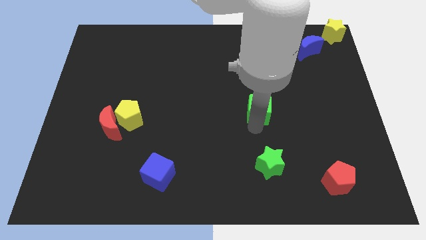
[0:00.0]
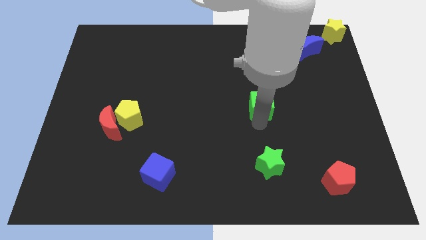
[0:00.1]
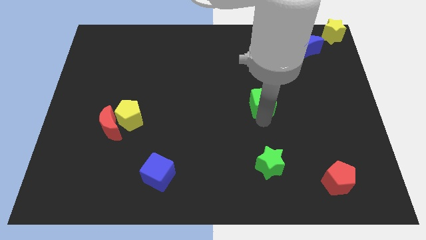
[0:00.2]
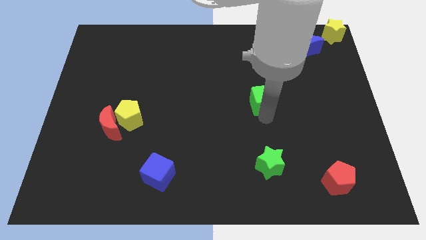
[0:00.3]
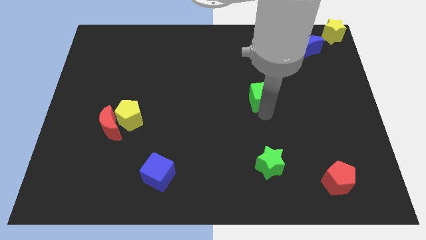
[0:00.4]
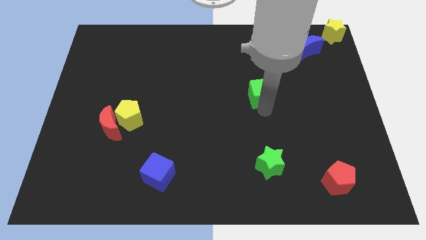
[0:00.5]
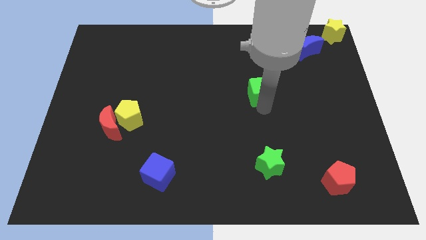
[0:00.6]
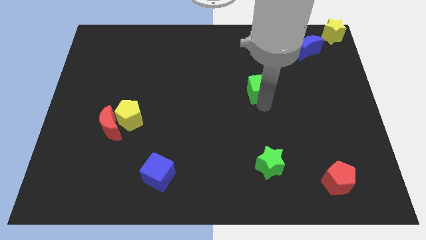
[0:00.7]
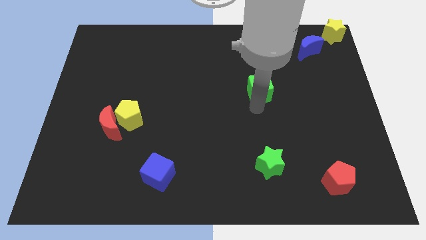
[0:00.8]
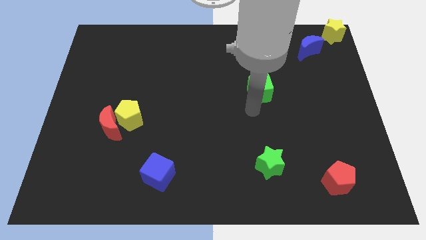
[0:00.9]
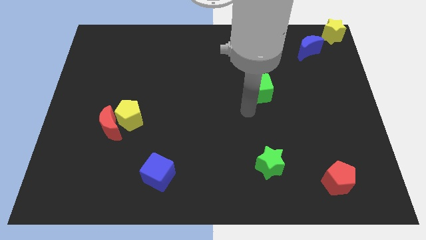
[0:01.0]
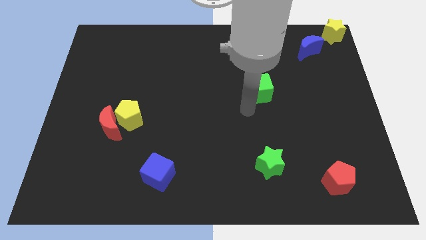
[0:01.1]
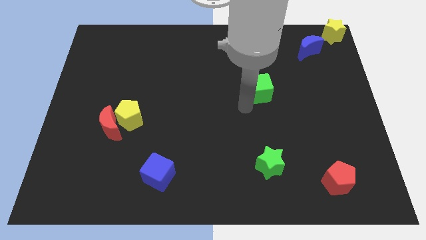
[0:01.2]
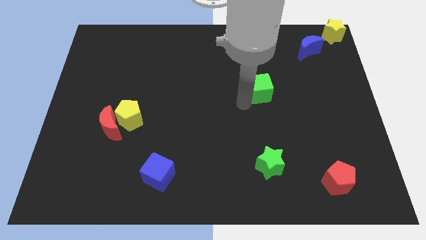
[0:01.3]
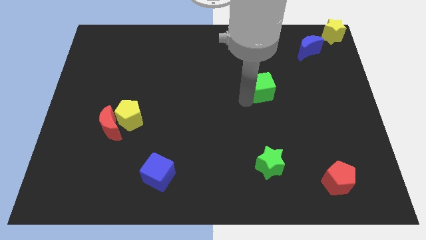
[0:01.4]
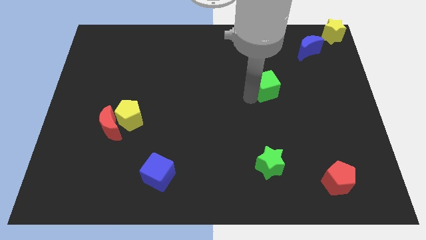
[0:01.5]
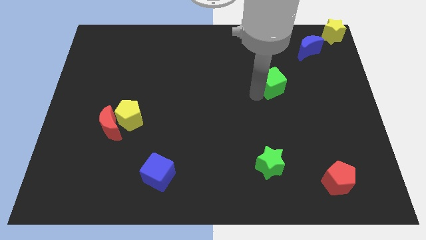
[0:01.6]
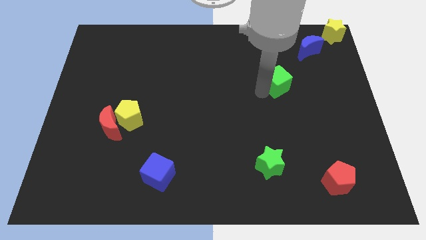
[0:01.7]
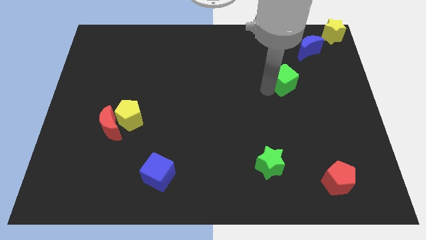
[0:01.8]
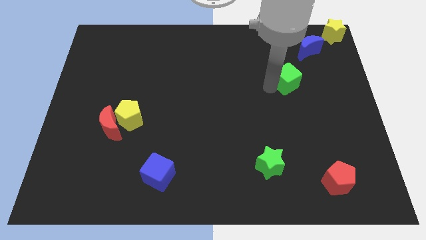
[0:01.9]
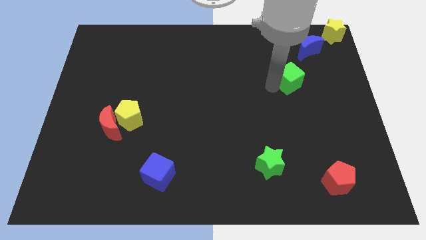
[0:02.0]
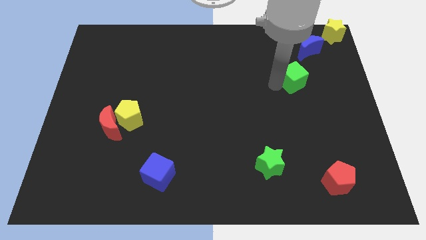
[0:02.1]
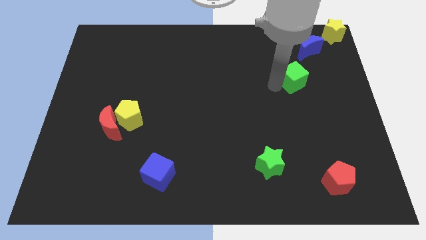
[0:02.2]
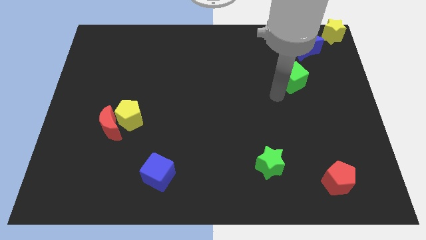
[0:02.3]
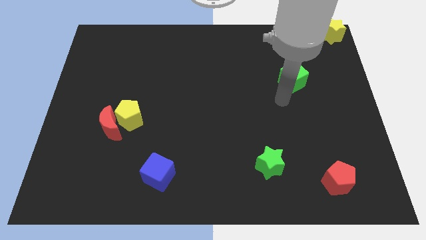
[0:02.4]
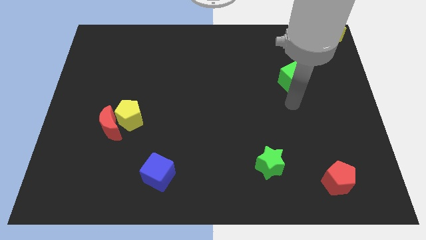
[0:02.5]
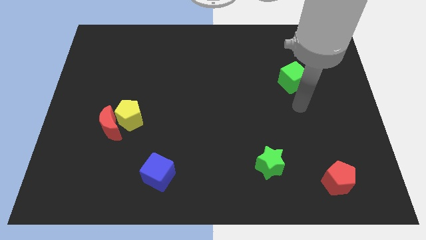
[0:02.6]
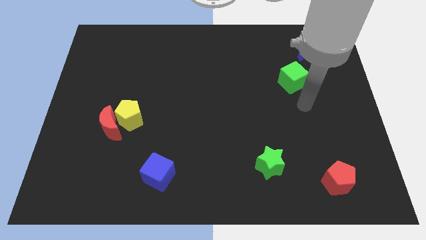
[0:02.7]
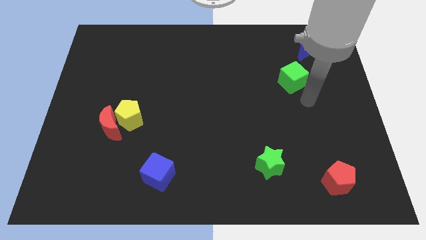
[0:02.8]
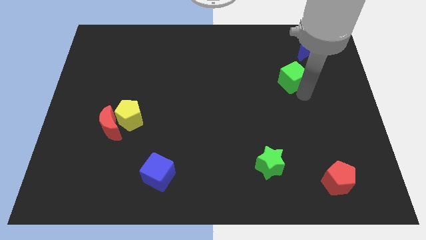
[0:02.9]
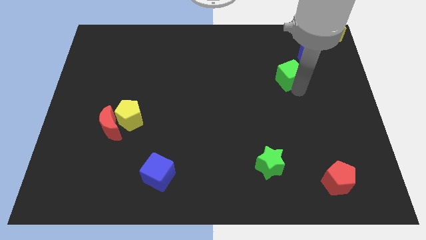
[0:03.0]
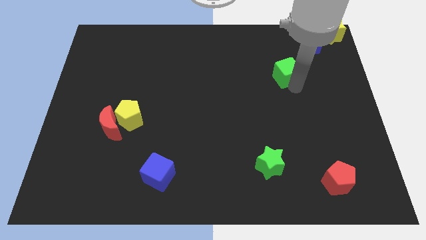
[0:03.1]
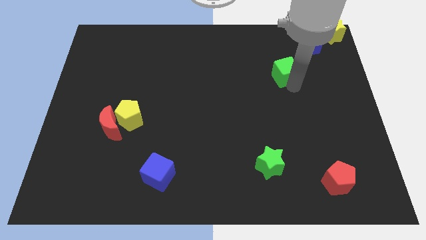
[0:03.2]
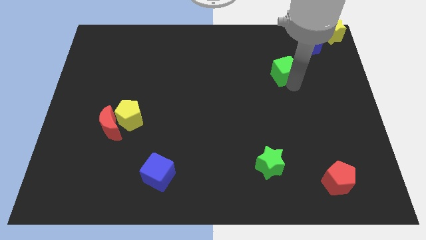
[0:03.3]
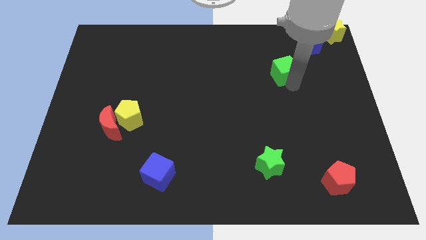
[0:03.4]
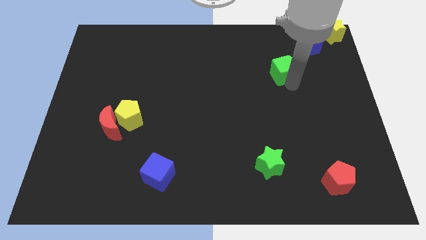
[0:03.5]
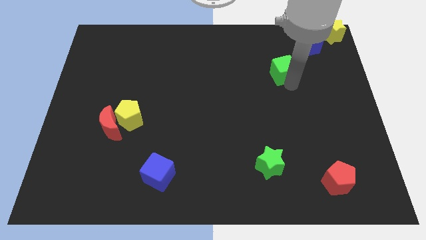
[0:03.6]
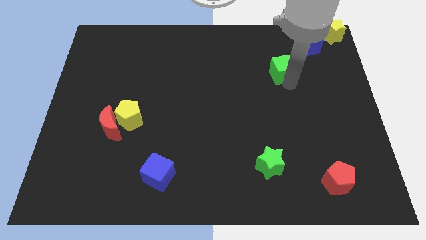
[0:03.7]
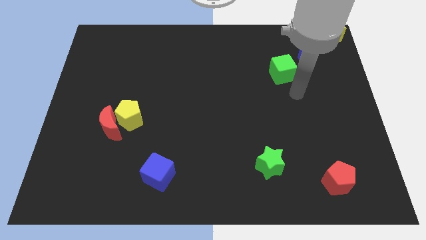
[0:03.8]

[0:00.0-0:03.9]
place green cube diagonally on the bottom left side of blue crescent

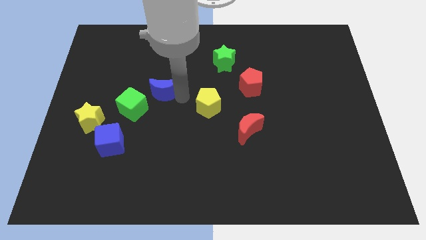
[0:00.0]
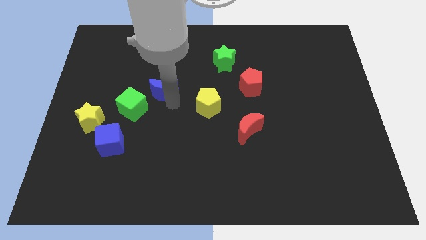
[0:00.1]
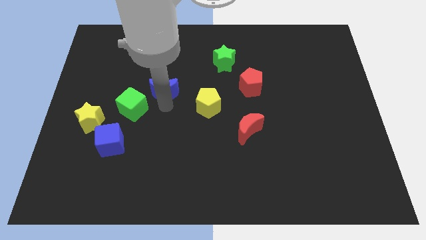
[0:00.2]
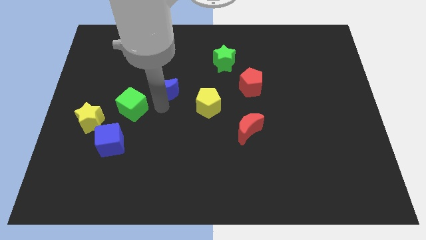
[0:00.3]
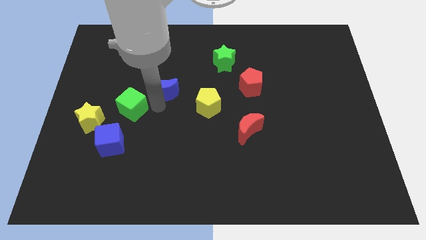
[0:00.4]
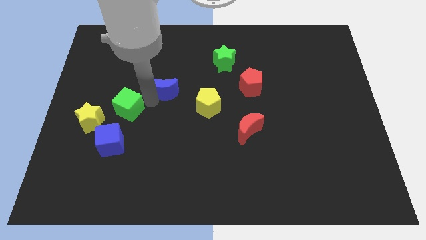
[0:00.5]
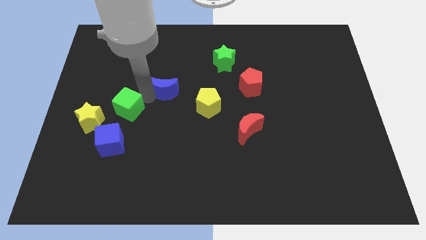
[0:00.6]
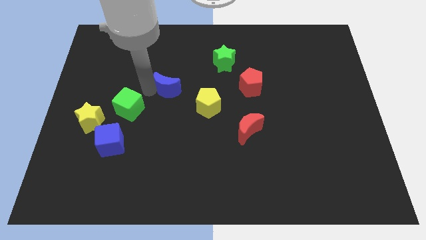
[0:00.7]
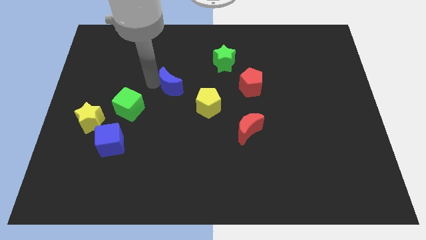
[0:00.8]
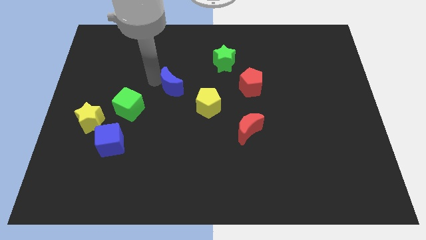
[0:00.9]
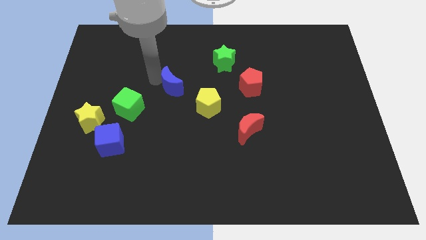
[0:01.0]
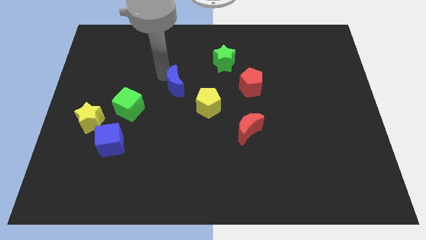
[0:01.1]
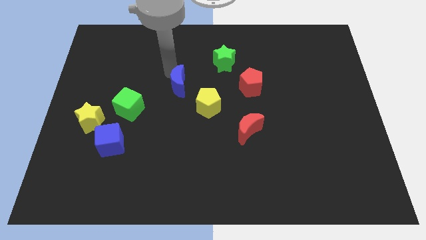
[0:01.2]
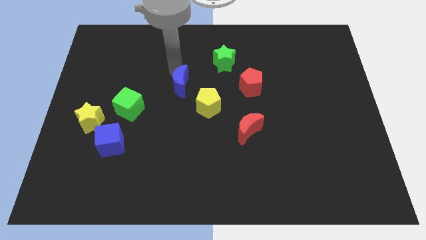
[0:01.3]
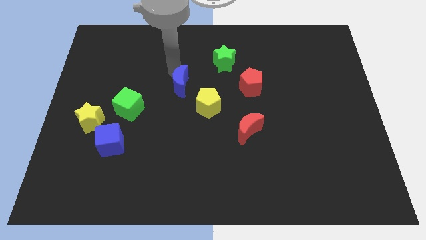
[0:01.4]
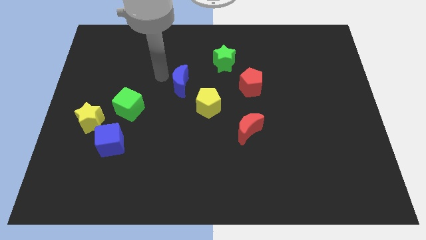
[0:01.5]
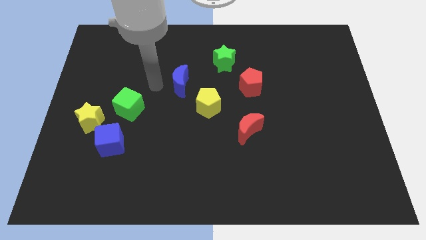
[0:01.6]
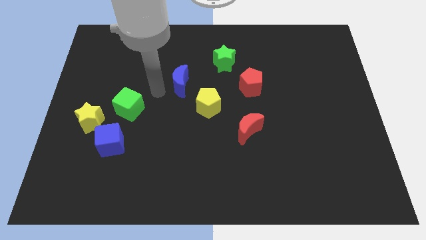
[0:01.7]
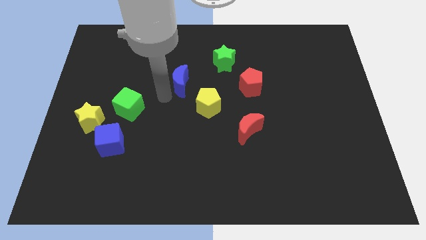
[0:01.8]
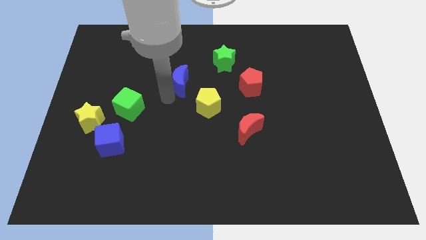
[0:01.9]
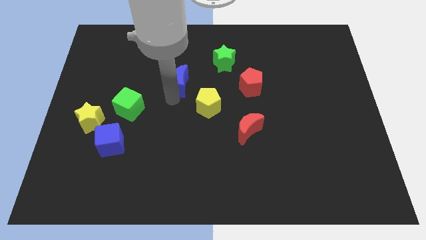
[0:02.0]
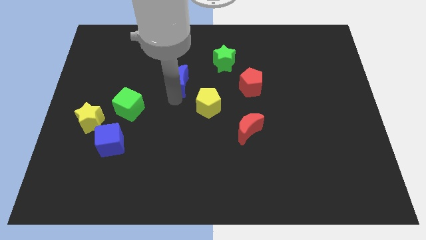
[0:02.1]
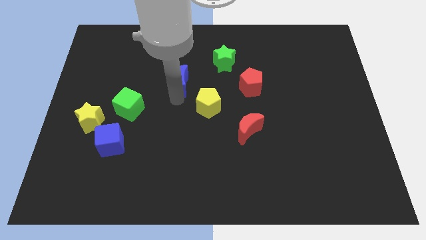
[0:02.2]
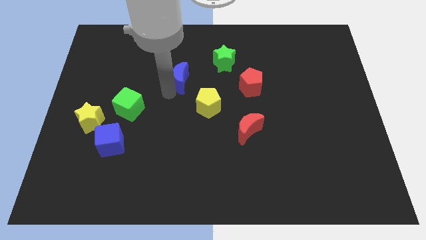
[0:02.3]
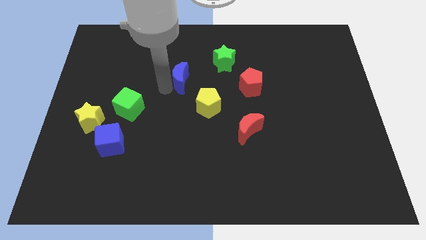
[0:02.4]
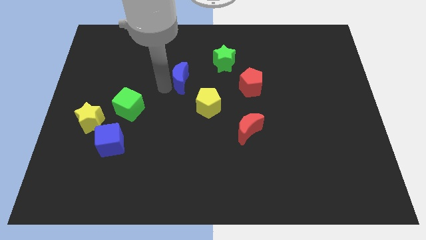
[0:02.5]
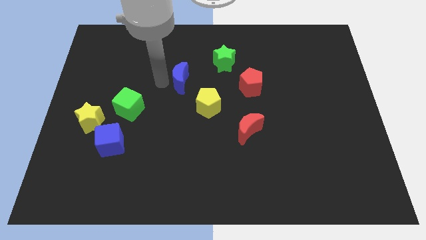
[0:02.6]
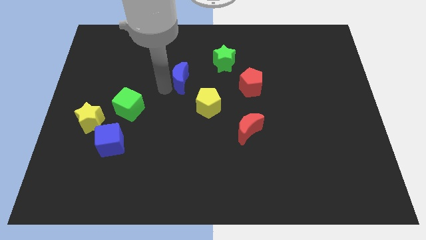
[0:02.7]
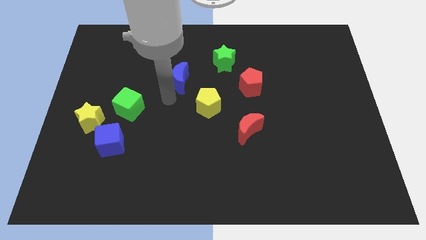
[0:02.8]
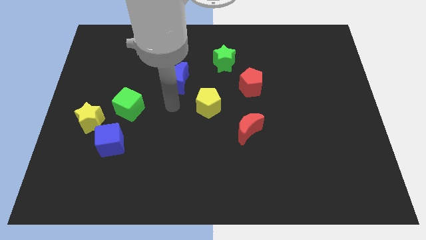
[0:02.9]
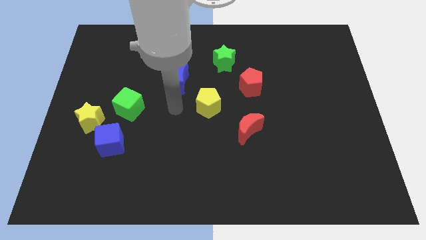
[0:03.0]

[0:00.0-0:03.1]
place your arm in between the green cube and yellow pentagon

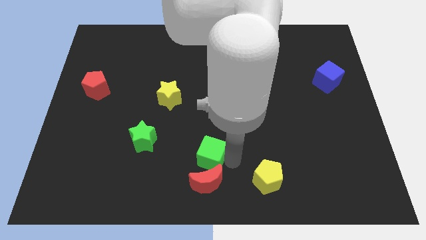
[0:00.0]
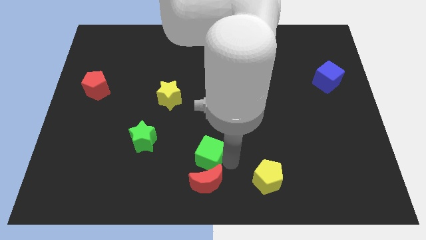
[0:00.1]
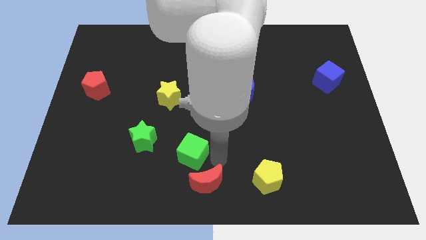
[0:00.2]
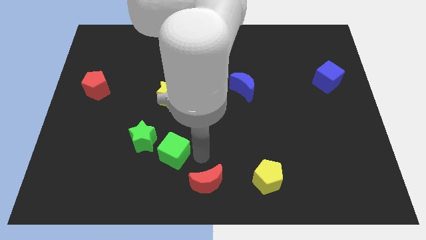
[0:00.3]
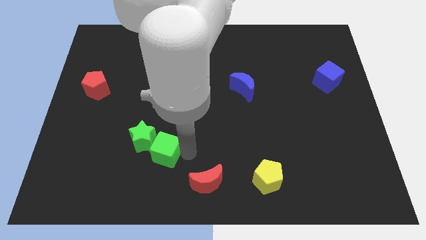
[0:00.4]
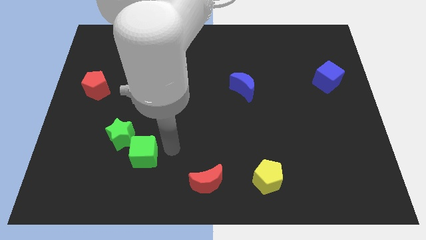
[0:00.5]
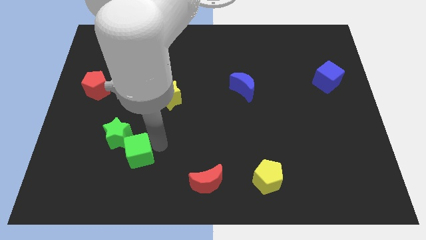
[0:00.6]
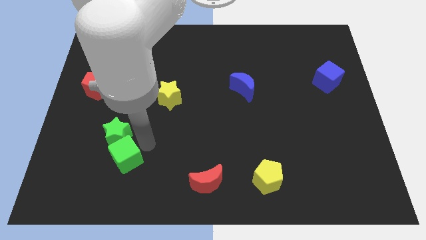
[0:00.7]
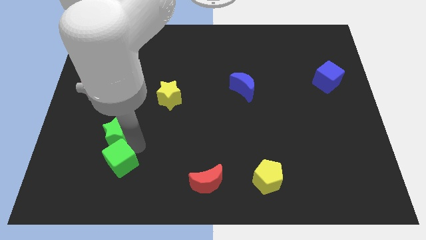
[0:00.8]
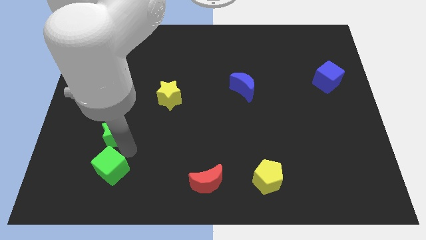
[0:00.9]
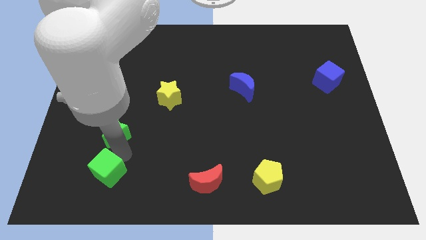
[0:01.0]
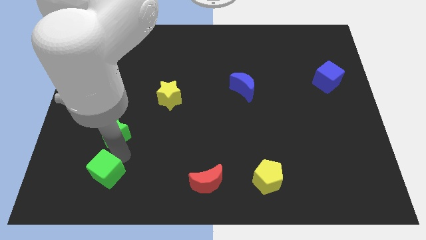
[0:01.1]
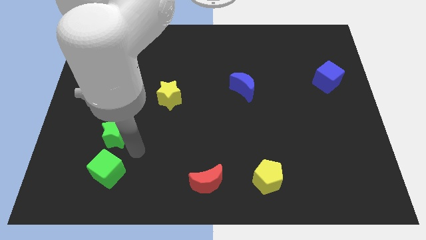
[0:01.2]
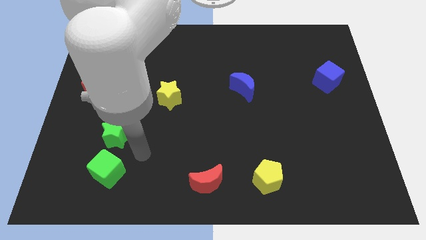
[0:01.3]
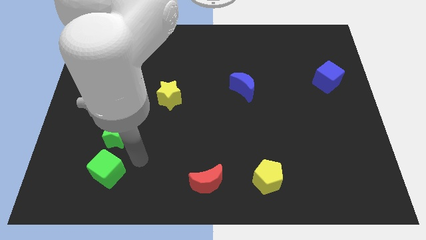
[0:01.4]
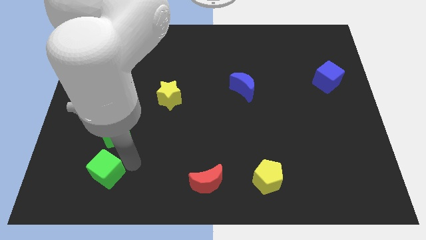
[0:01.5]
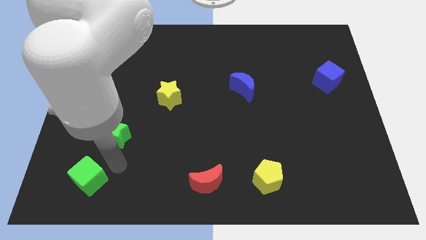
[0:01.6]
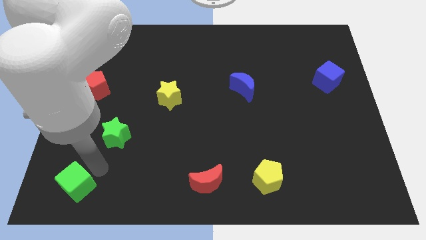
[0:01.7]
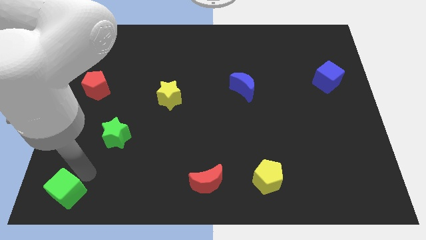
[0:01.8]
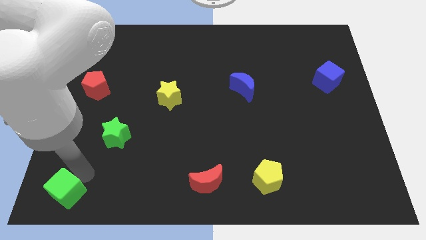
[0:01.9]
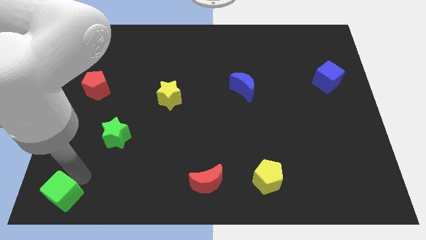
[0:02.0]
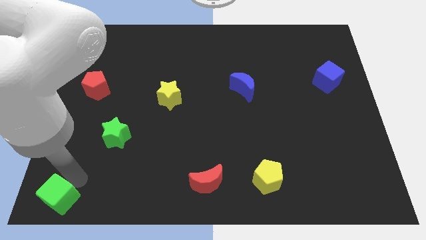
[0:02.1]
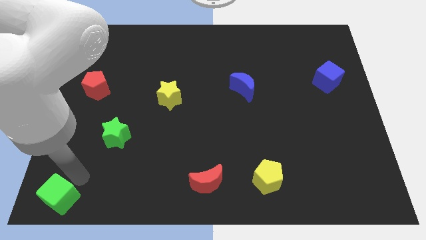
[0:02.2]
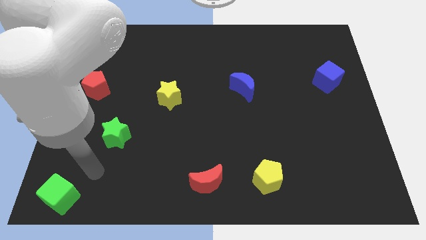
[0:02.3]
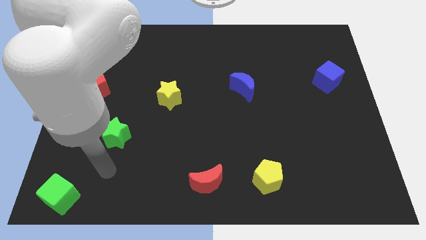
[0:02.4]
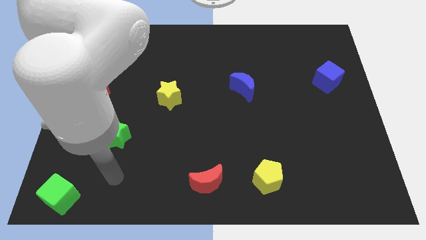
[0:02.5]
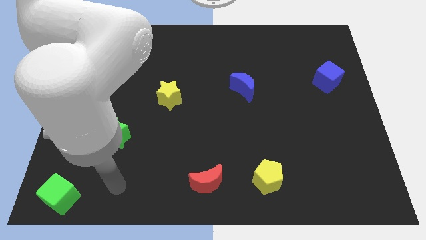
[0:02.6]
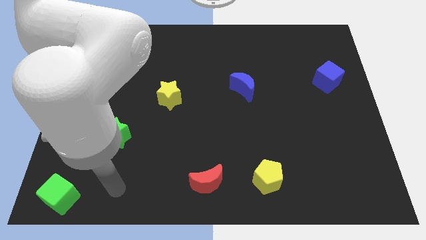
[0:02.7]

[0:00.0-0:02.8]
separate green cube from red moon
